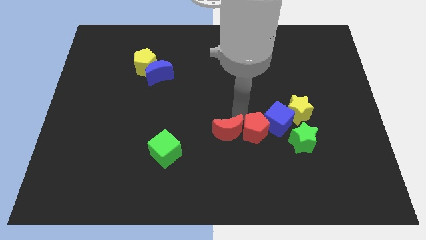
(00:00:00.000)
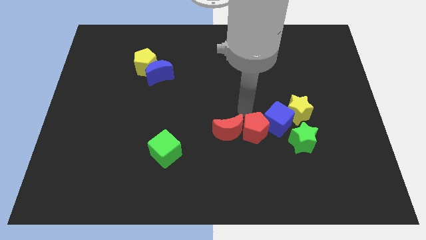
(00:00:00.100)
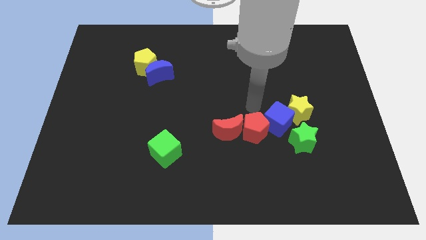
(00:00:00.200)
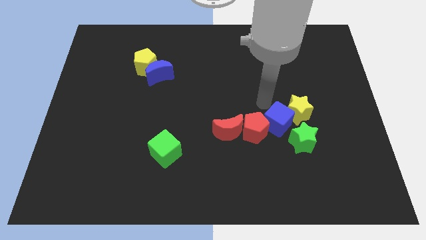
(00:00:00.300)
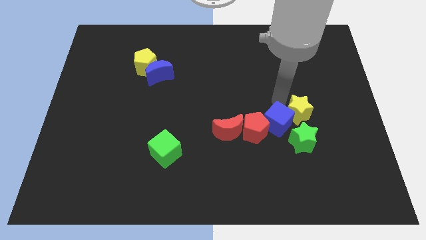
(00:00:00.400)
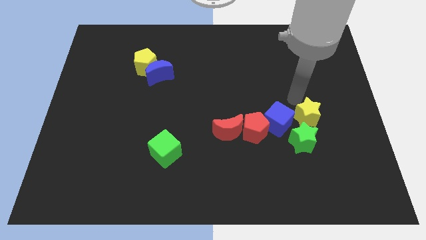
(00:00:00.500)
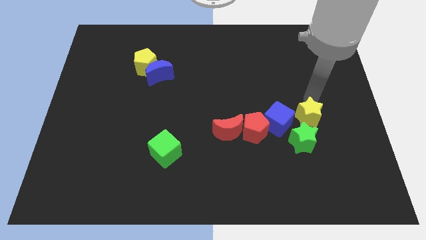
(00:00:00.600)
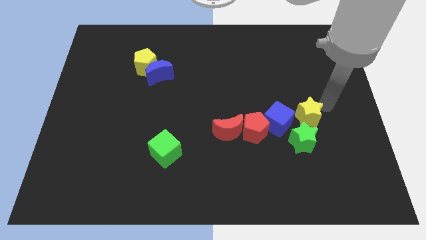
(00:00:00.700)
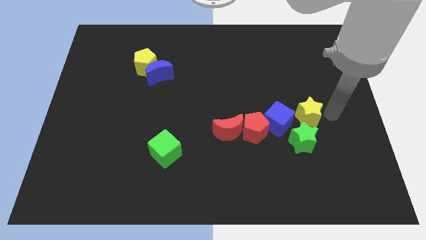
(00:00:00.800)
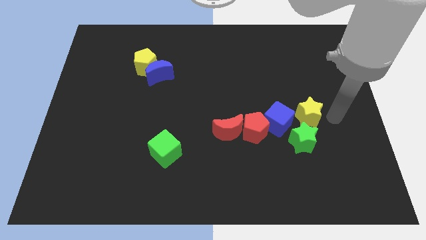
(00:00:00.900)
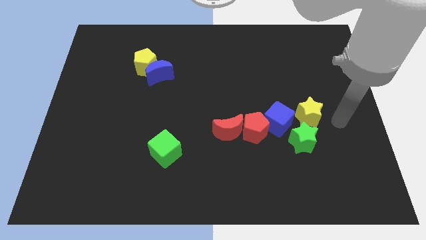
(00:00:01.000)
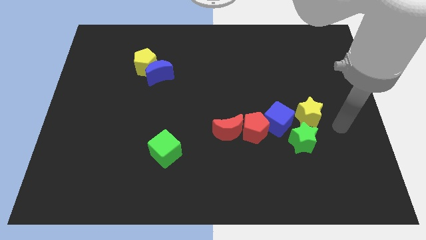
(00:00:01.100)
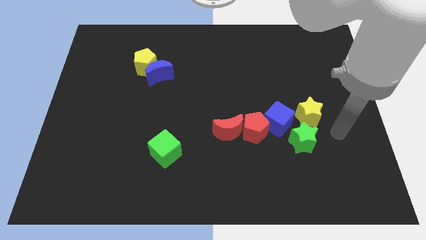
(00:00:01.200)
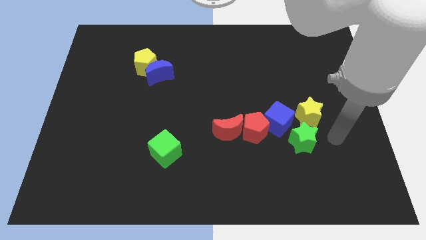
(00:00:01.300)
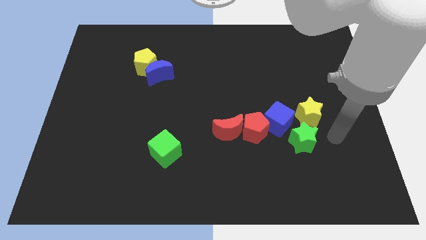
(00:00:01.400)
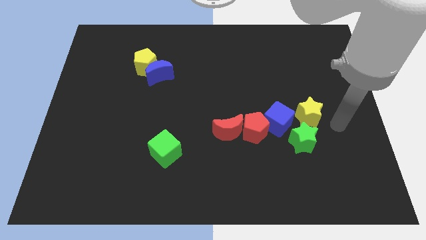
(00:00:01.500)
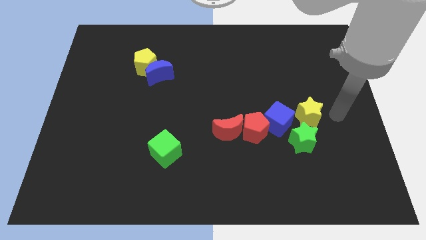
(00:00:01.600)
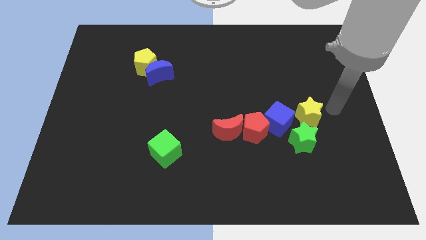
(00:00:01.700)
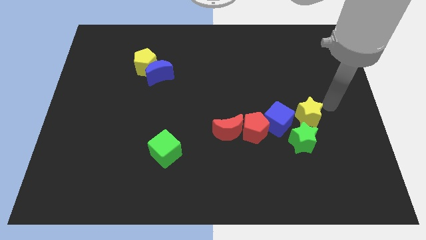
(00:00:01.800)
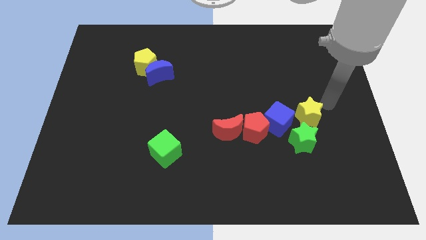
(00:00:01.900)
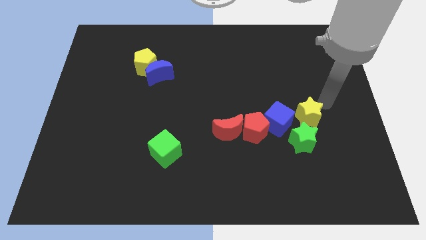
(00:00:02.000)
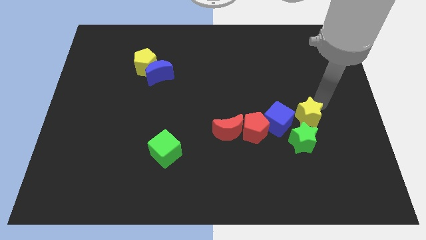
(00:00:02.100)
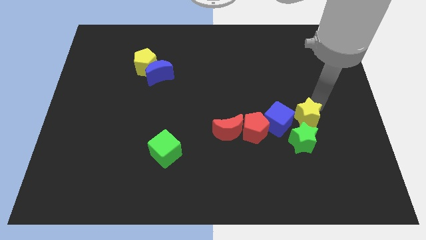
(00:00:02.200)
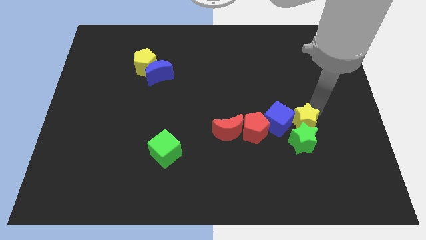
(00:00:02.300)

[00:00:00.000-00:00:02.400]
place the arm above the yellow star

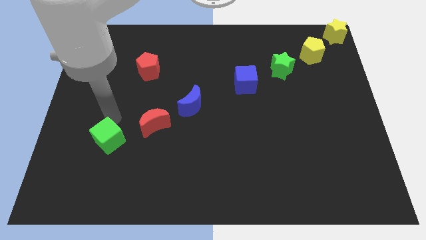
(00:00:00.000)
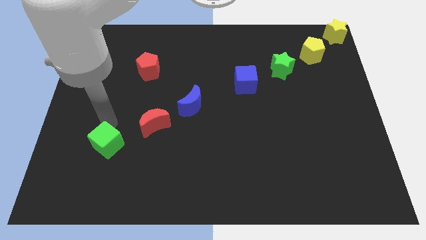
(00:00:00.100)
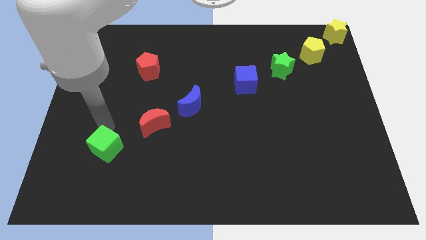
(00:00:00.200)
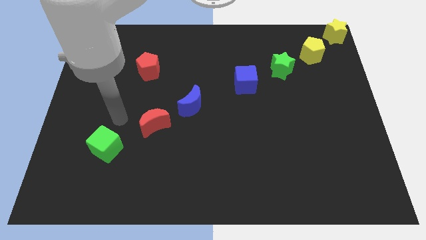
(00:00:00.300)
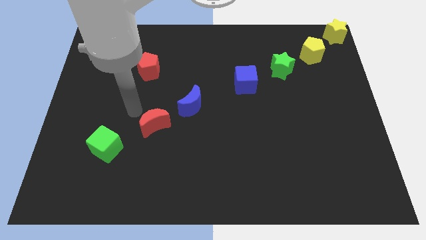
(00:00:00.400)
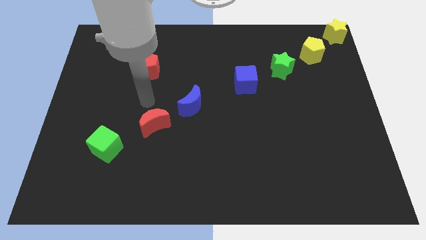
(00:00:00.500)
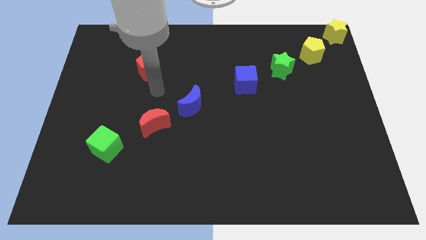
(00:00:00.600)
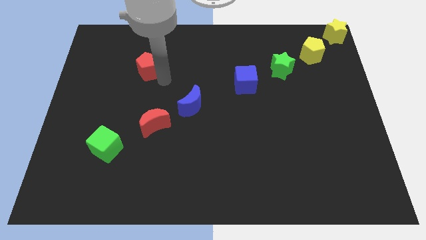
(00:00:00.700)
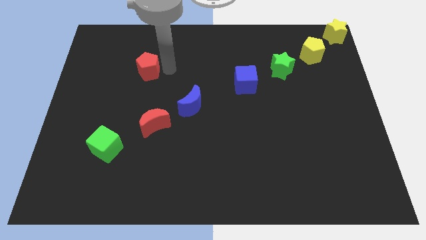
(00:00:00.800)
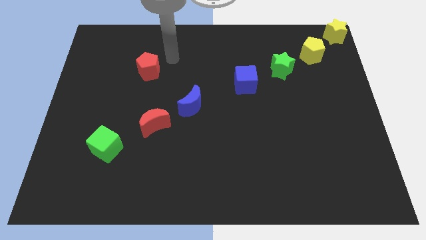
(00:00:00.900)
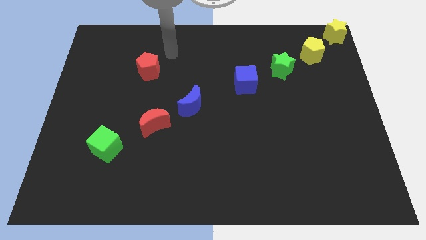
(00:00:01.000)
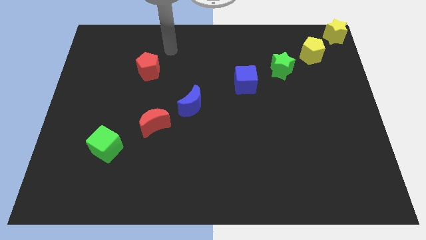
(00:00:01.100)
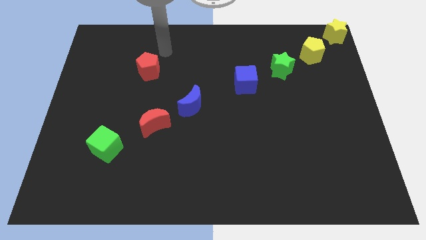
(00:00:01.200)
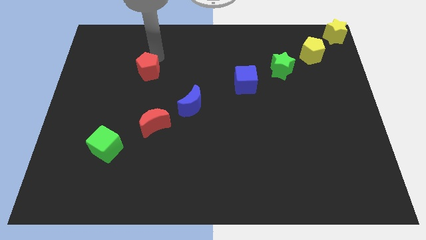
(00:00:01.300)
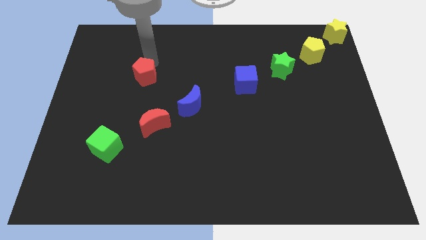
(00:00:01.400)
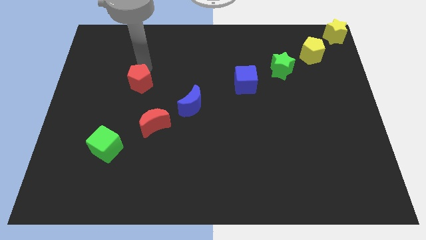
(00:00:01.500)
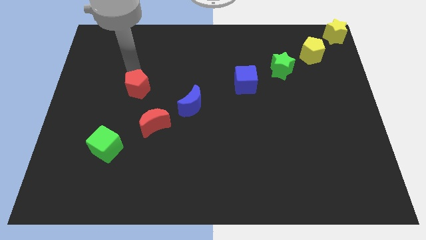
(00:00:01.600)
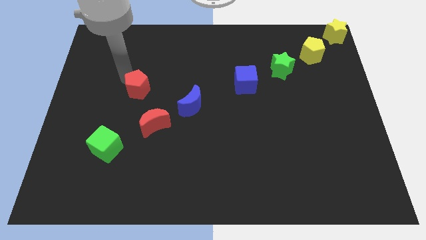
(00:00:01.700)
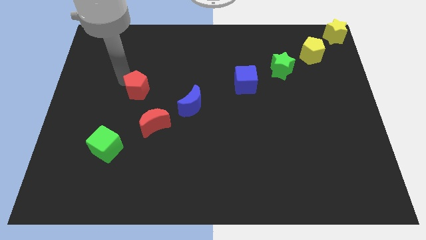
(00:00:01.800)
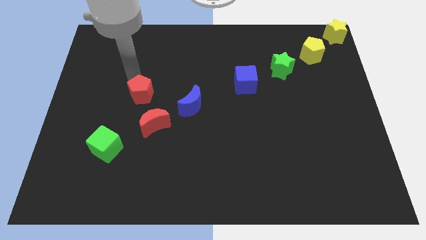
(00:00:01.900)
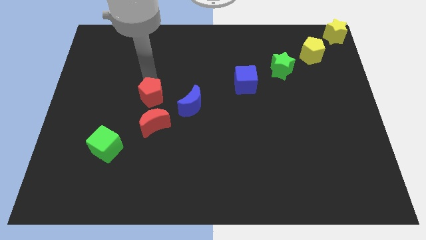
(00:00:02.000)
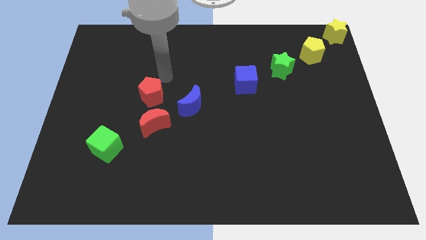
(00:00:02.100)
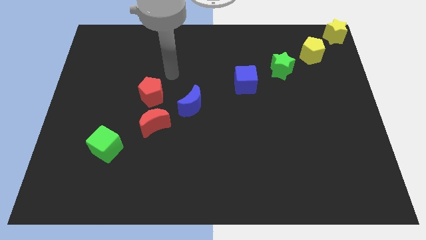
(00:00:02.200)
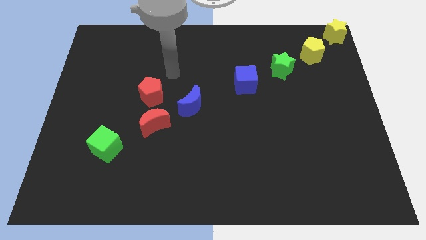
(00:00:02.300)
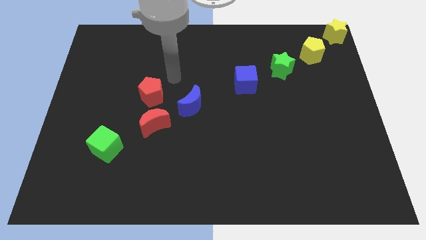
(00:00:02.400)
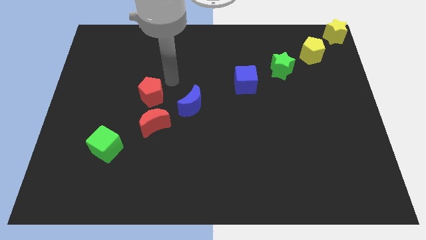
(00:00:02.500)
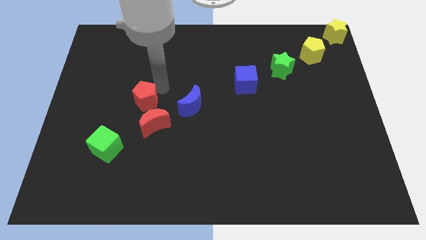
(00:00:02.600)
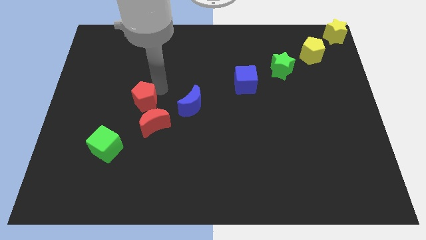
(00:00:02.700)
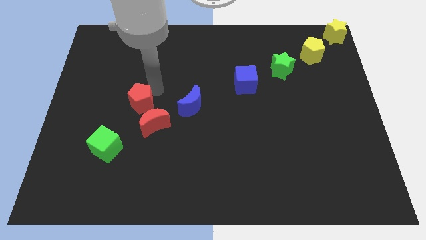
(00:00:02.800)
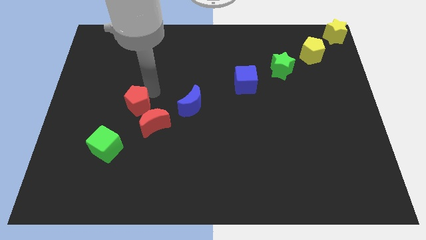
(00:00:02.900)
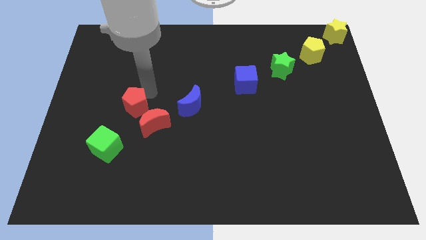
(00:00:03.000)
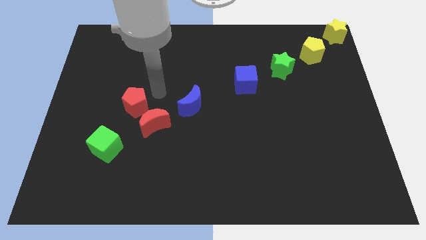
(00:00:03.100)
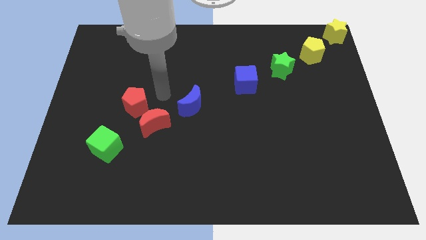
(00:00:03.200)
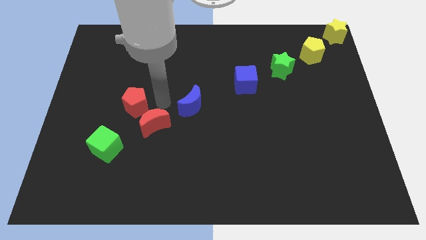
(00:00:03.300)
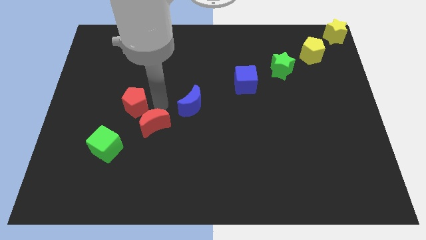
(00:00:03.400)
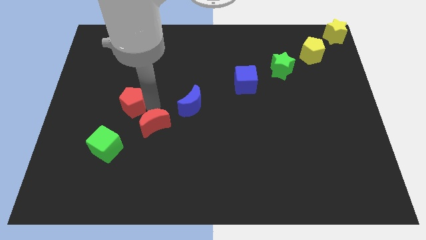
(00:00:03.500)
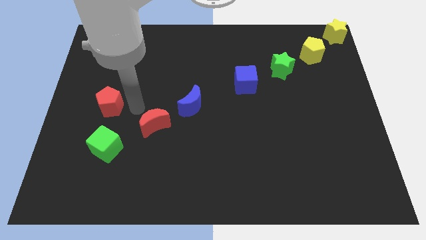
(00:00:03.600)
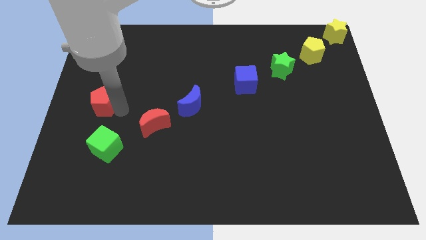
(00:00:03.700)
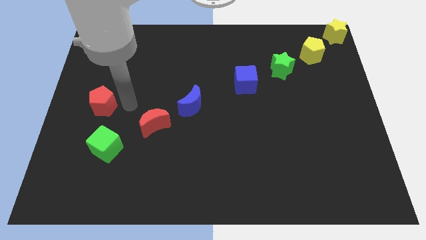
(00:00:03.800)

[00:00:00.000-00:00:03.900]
make a traingle by placing red pentagon

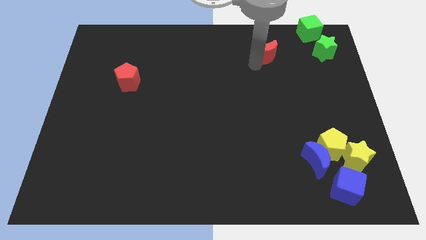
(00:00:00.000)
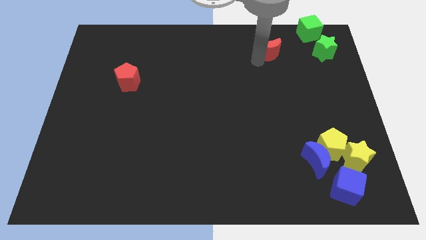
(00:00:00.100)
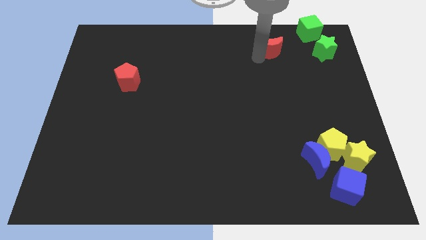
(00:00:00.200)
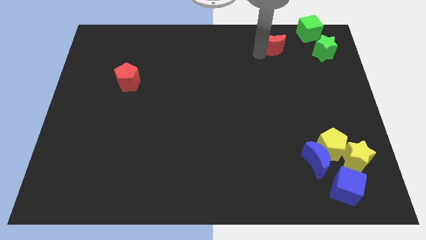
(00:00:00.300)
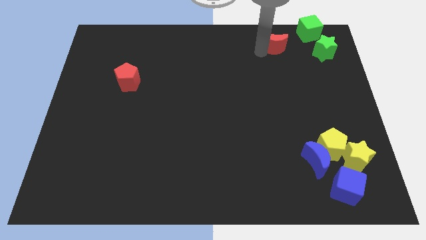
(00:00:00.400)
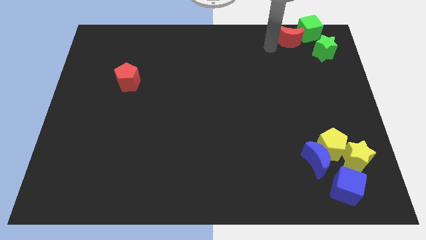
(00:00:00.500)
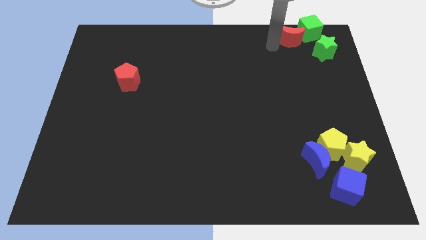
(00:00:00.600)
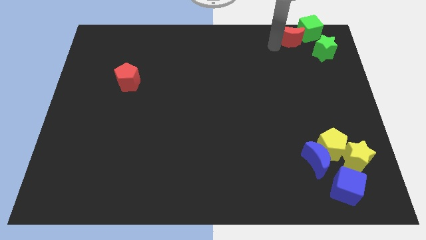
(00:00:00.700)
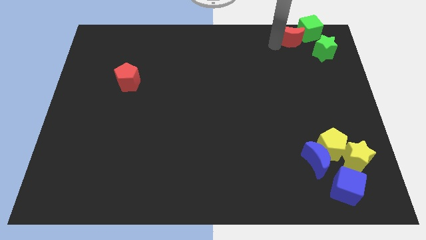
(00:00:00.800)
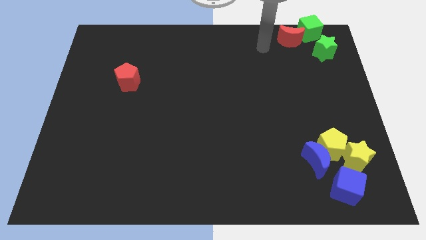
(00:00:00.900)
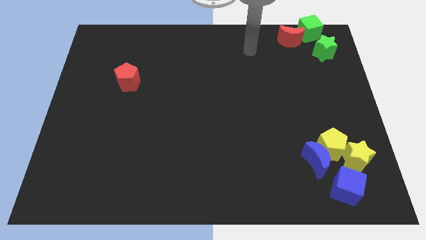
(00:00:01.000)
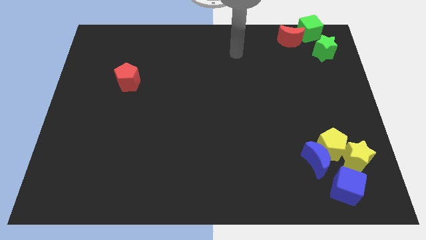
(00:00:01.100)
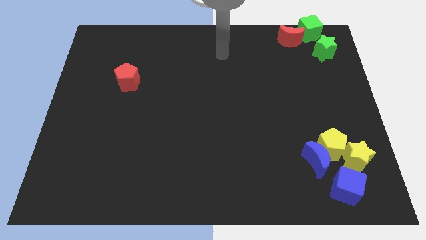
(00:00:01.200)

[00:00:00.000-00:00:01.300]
push the red crescent into the green cube

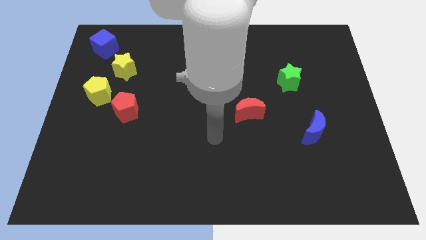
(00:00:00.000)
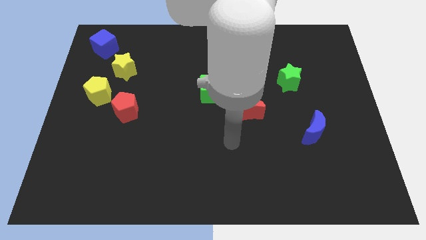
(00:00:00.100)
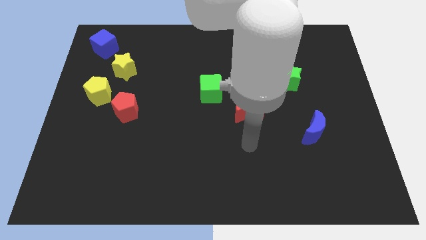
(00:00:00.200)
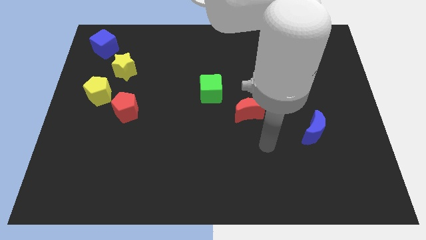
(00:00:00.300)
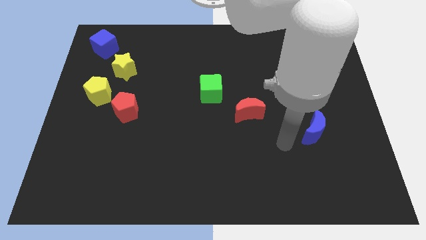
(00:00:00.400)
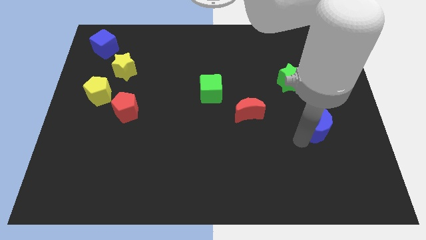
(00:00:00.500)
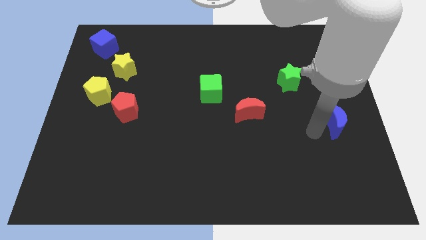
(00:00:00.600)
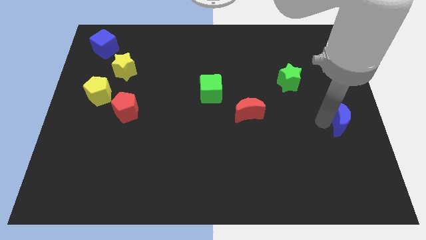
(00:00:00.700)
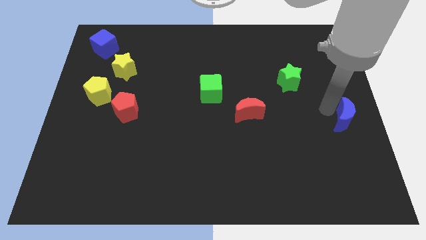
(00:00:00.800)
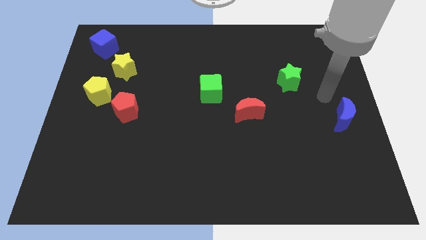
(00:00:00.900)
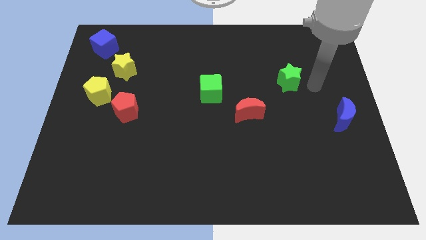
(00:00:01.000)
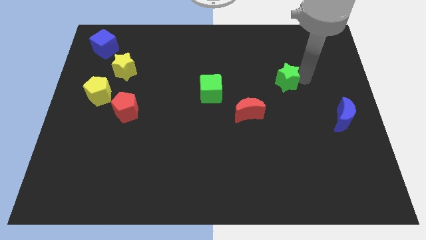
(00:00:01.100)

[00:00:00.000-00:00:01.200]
push the blue crescent towards the center right side of the board
